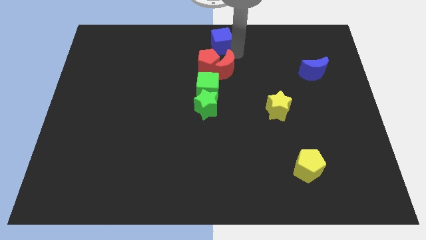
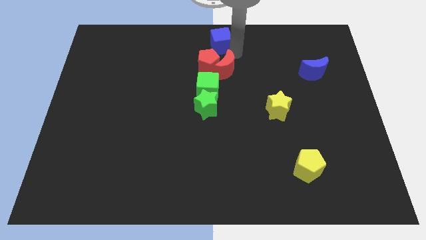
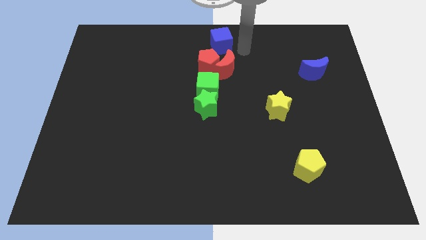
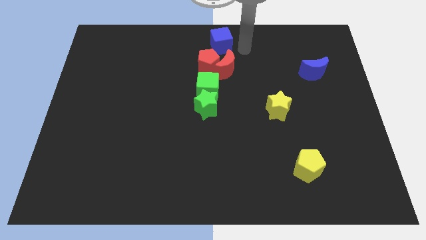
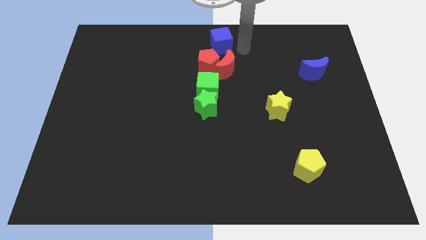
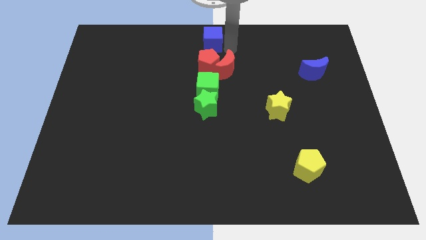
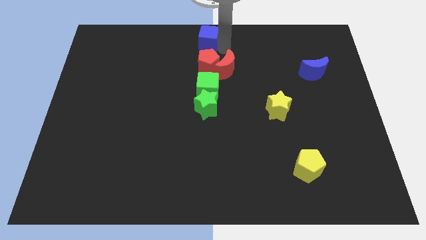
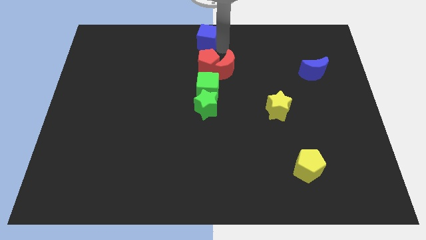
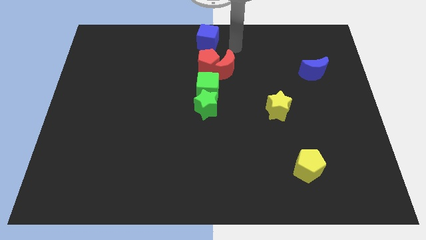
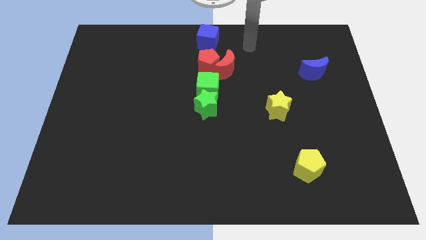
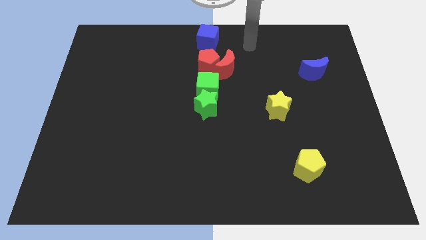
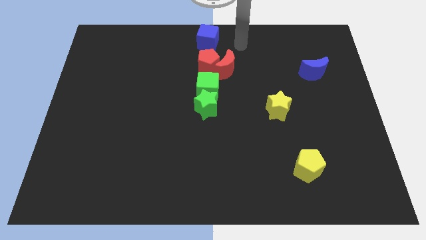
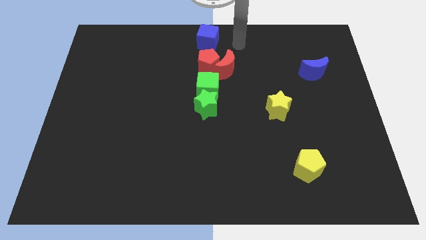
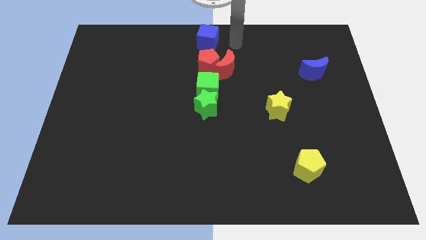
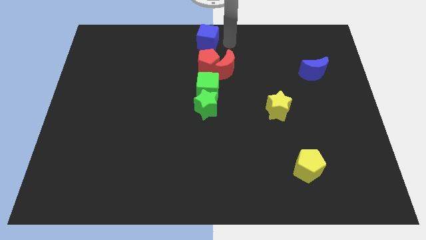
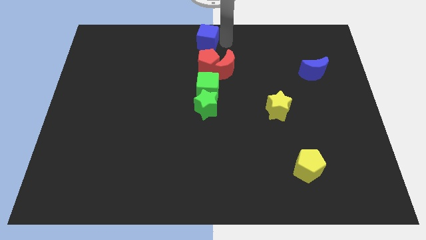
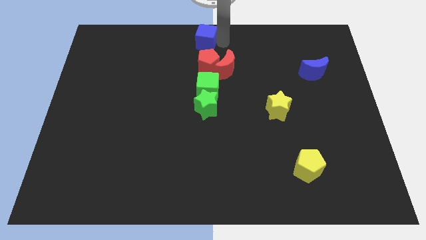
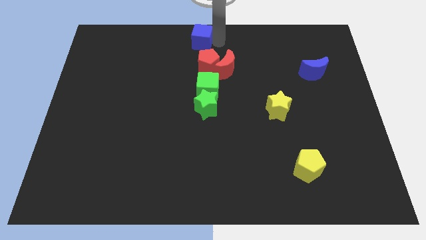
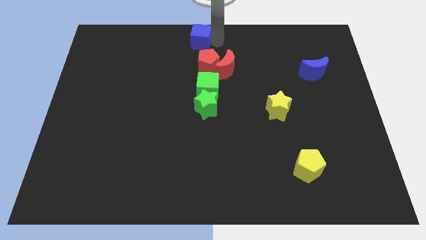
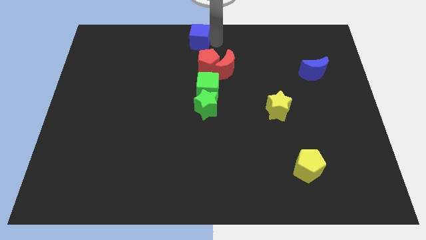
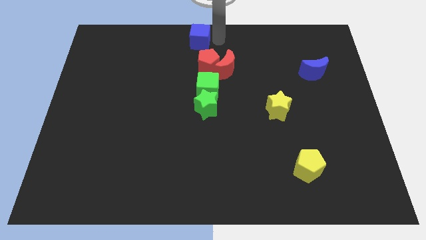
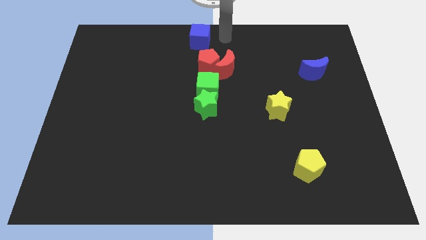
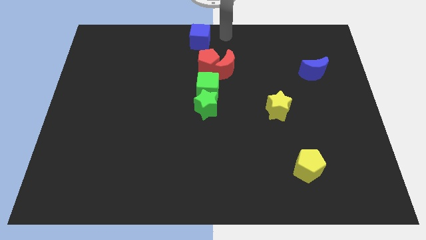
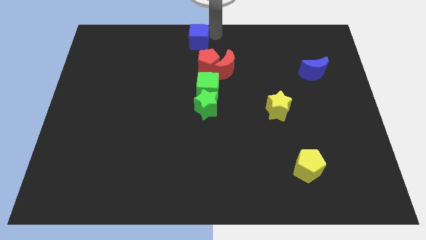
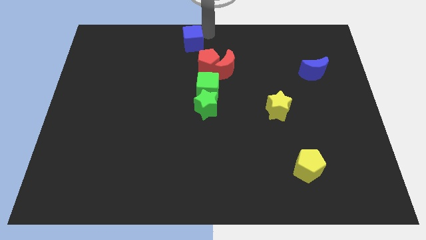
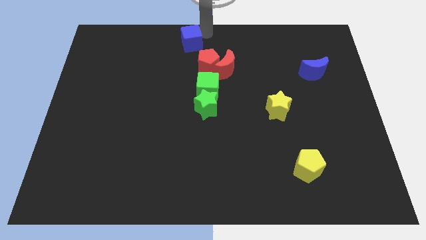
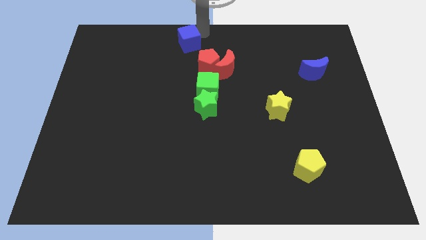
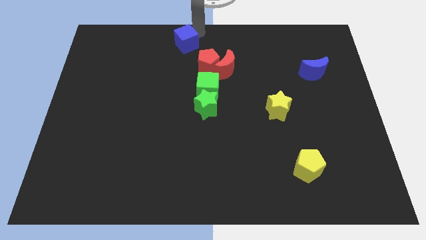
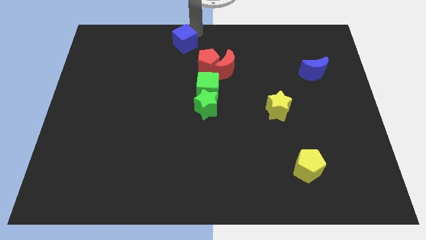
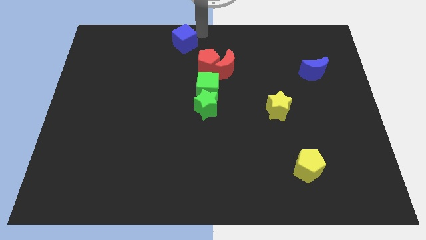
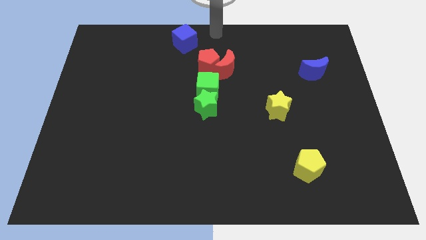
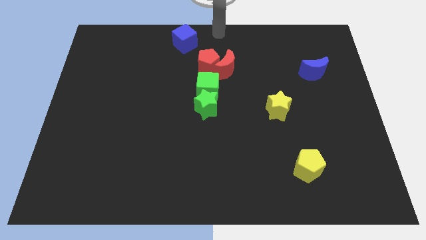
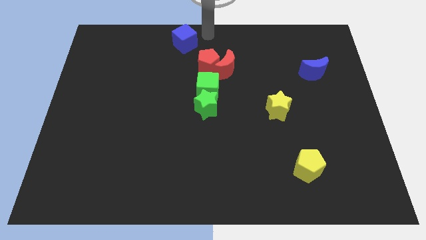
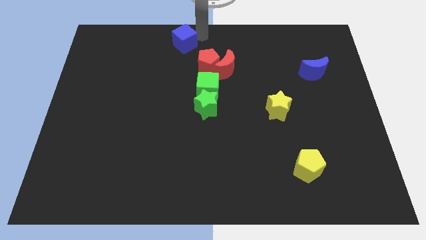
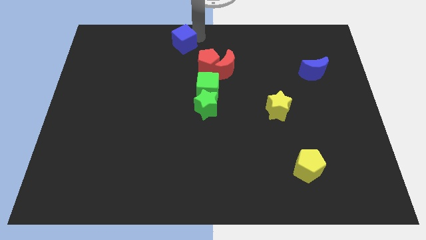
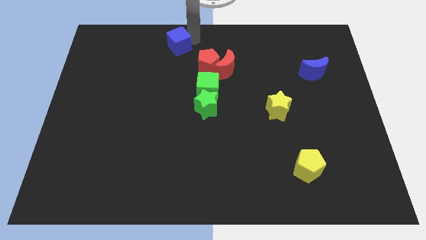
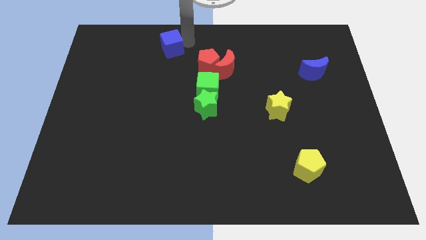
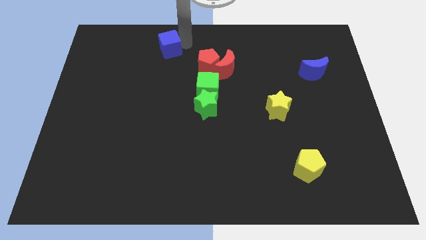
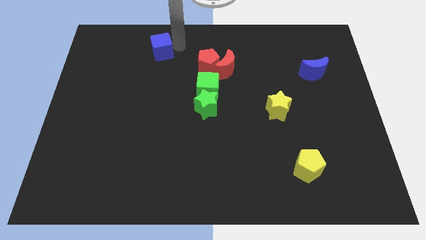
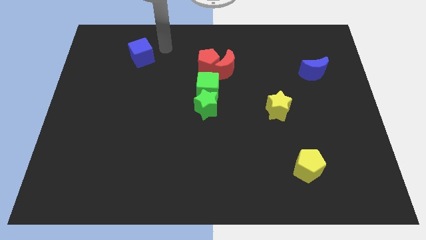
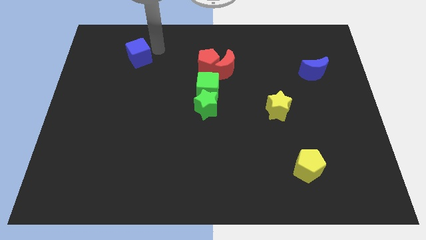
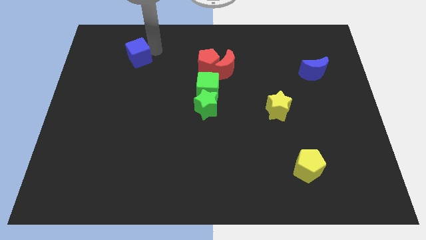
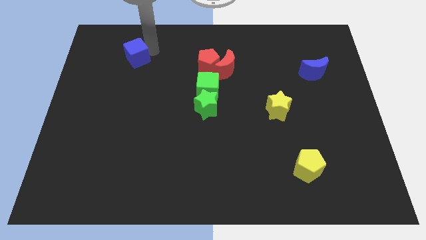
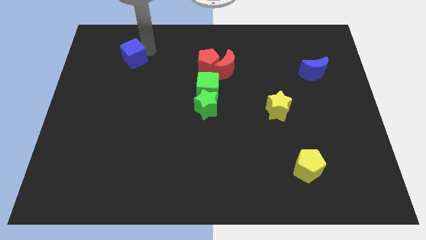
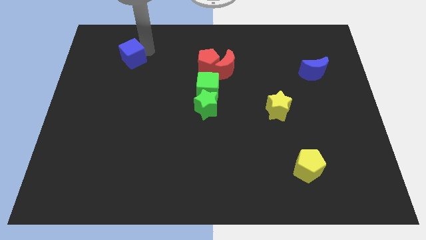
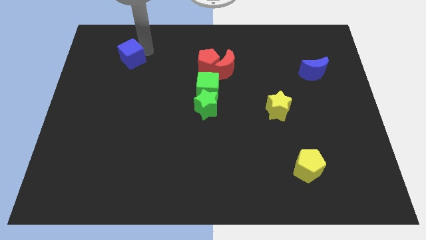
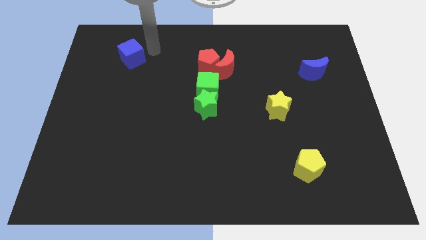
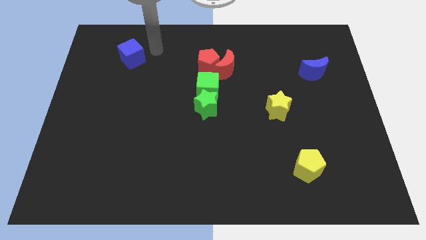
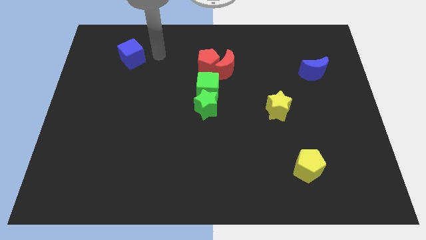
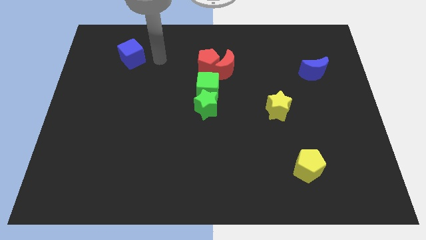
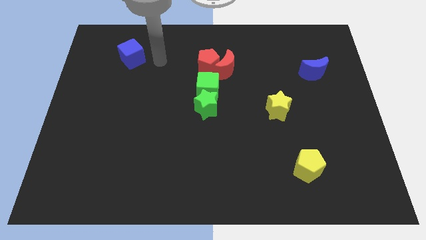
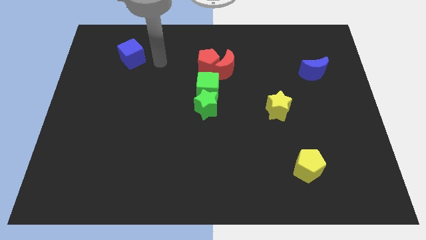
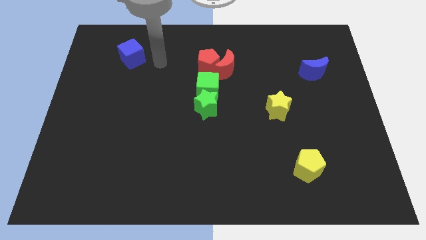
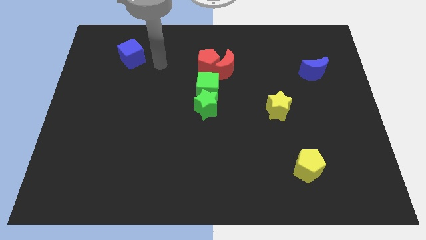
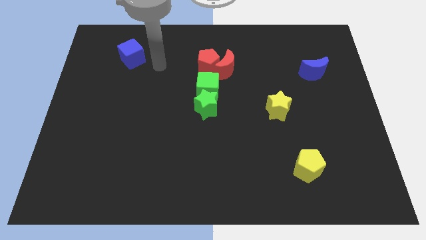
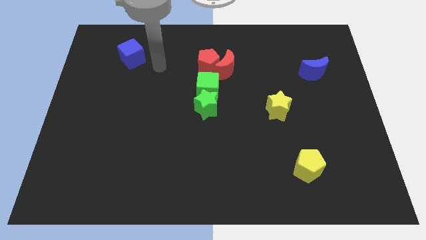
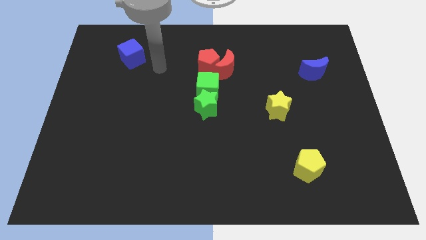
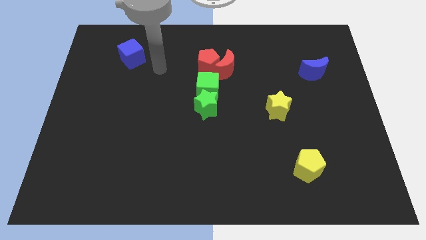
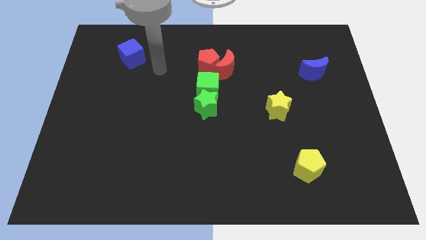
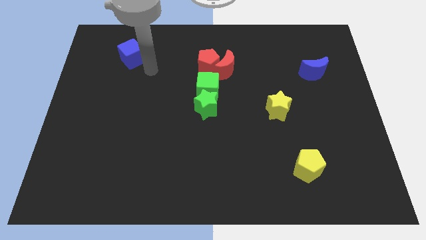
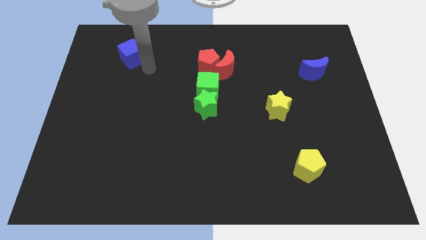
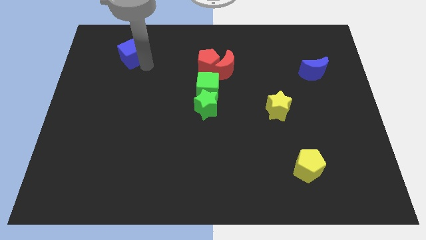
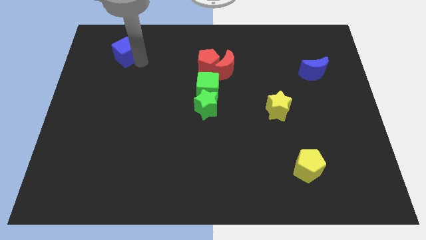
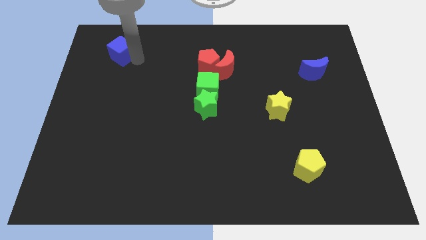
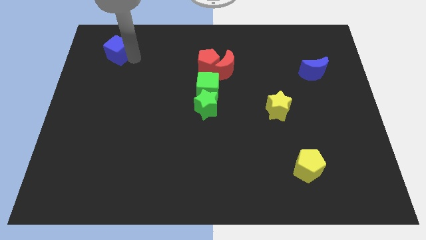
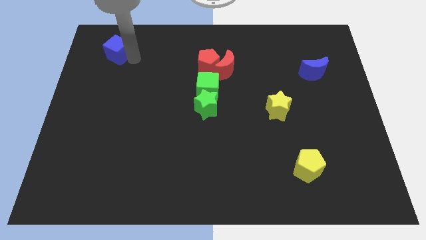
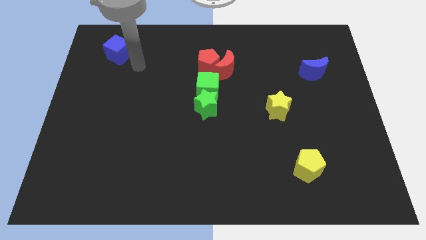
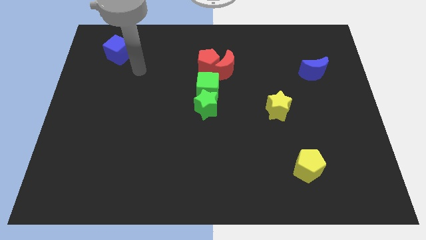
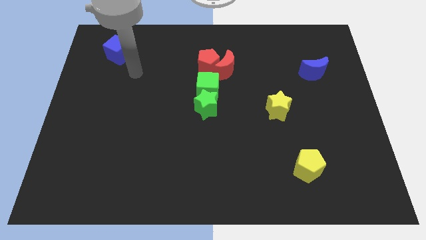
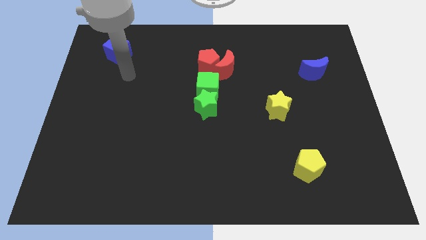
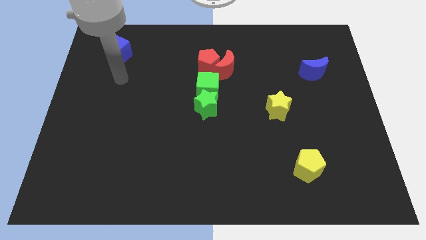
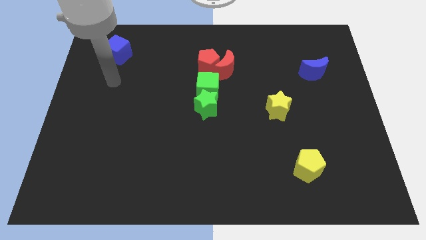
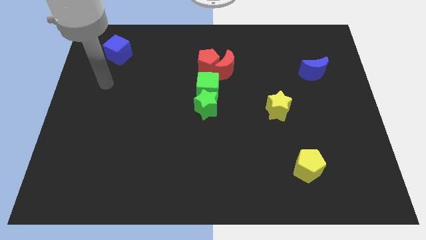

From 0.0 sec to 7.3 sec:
slide the blue cube slightly to the left

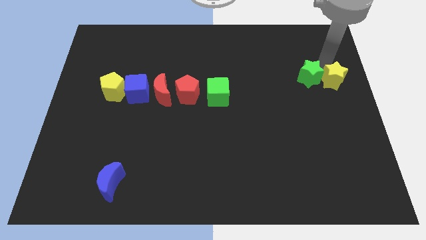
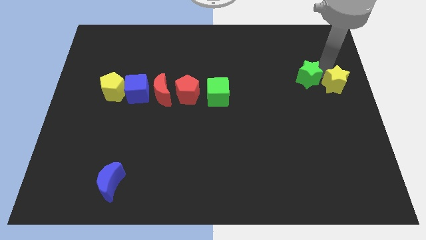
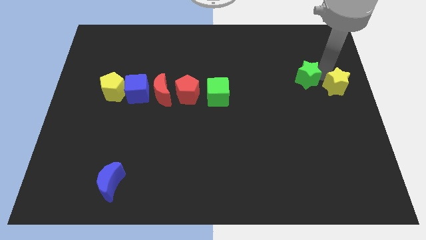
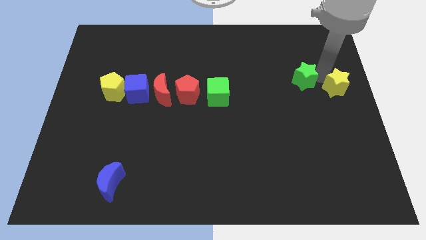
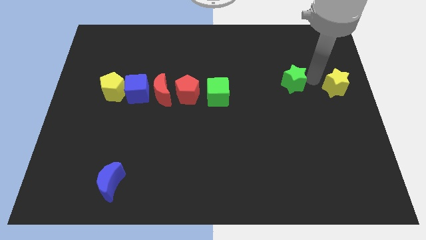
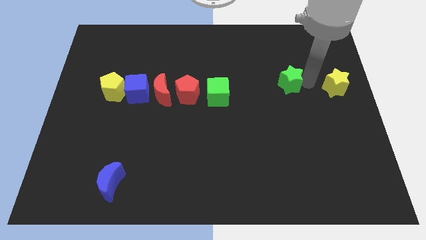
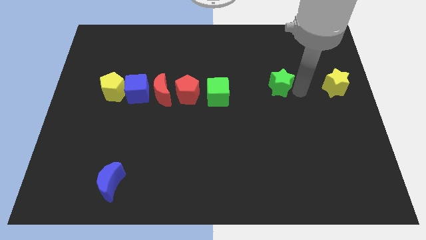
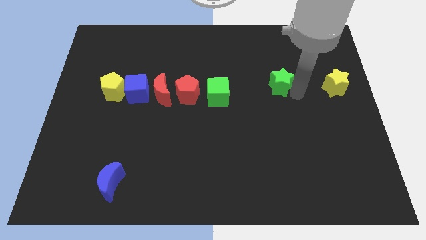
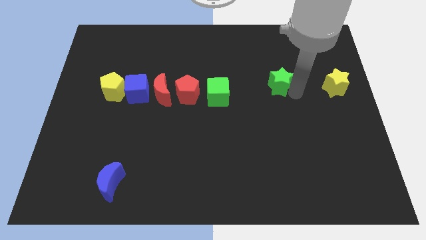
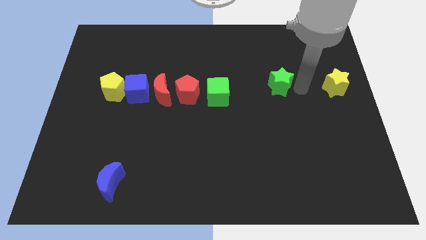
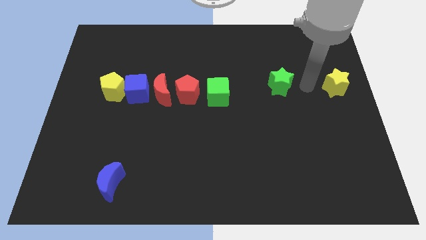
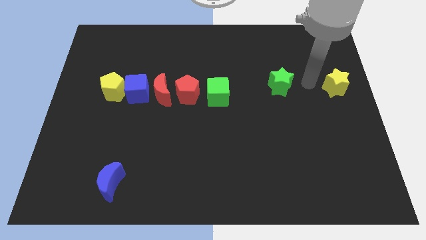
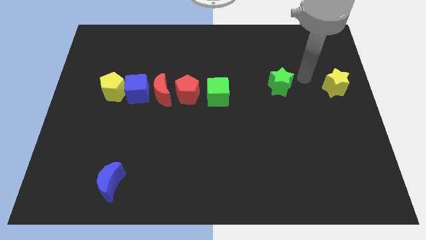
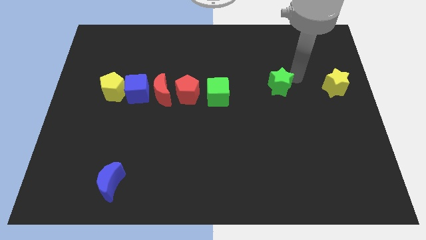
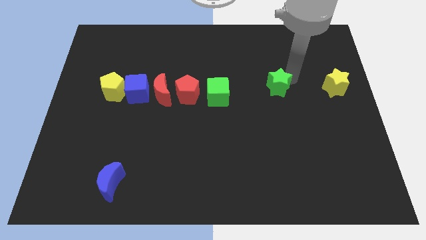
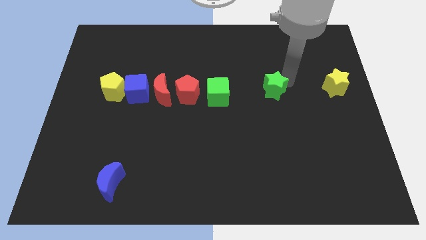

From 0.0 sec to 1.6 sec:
separate the green star from the yellow star
